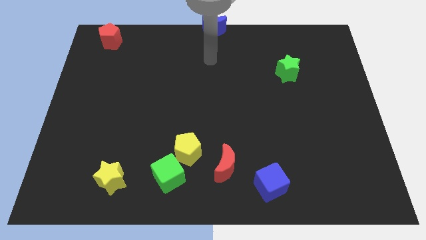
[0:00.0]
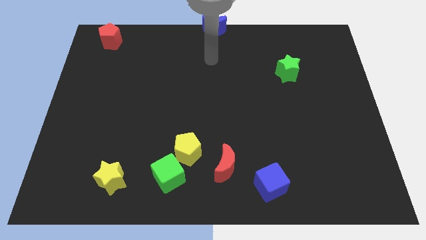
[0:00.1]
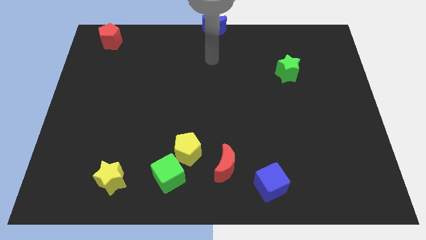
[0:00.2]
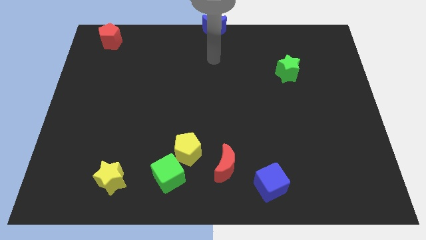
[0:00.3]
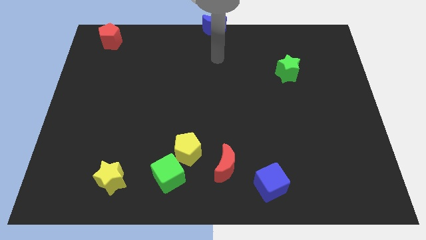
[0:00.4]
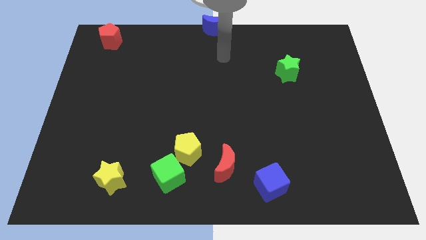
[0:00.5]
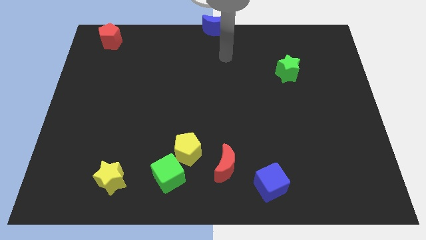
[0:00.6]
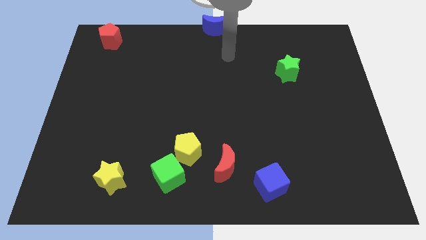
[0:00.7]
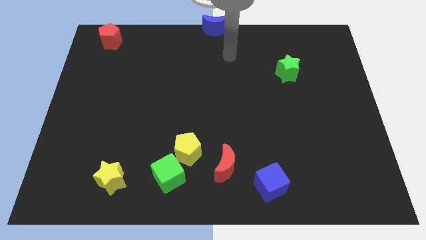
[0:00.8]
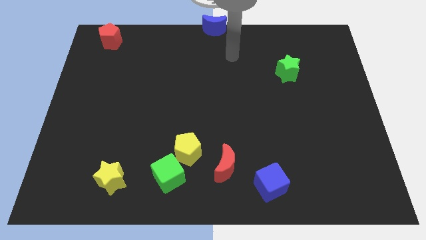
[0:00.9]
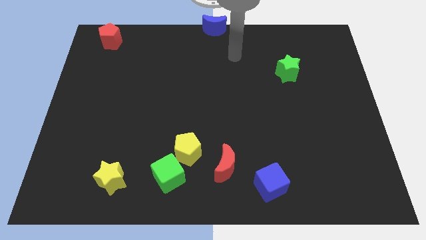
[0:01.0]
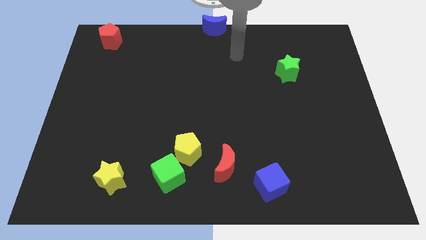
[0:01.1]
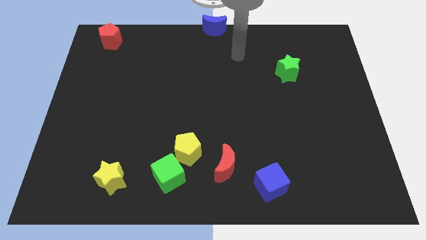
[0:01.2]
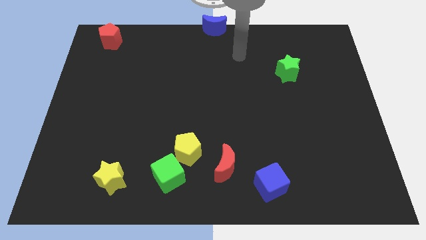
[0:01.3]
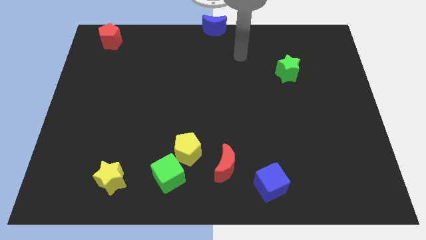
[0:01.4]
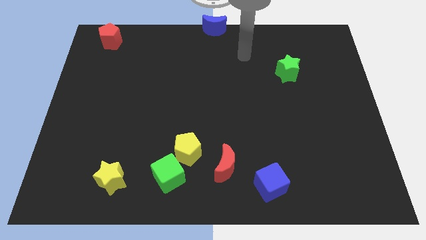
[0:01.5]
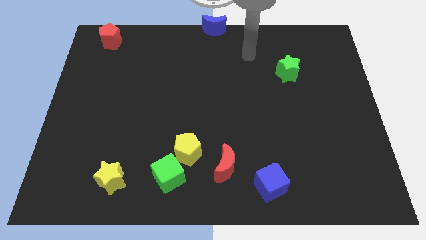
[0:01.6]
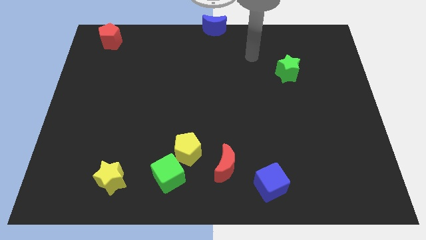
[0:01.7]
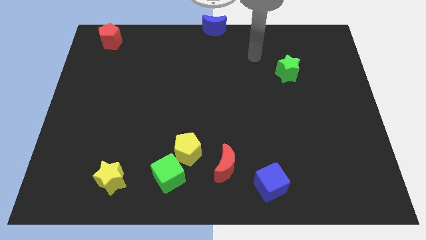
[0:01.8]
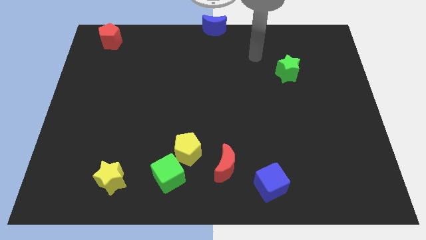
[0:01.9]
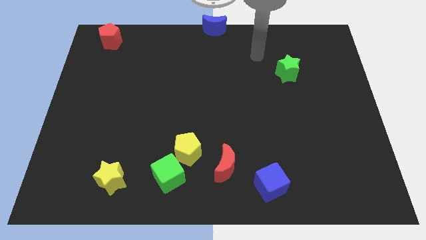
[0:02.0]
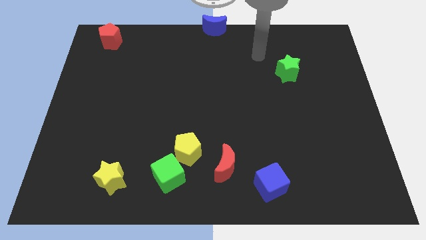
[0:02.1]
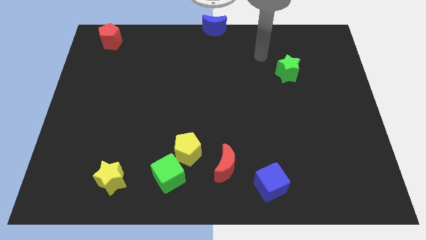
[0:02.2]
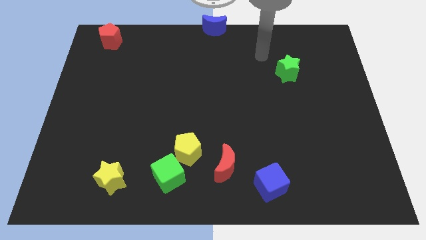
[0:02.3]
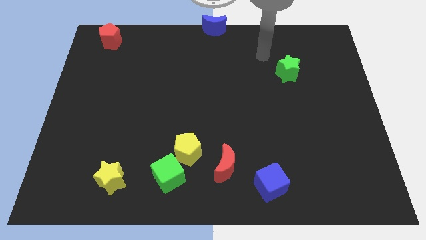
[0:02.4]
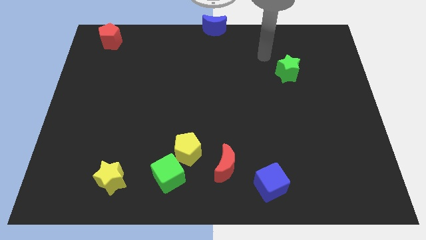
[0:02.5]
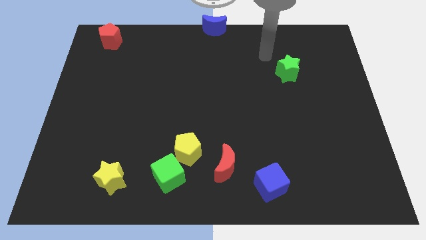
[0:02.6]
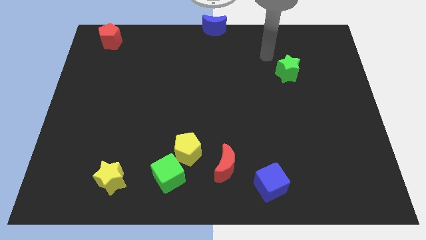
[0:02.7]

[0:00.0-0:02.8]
move the arm diagonally to the green star

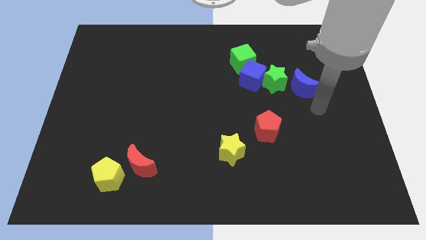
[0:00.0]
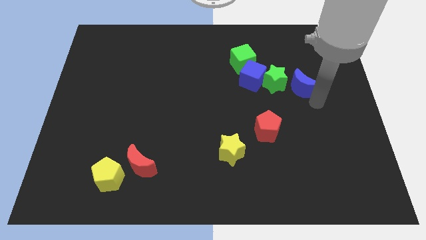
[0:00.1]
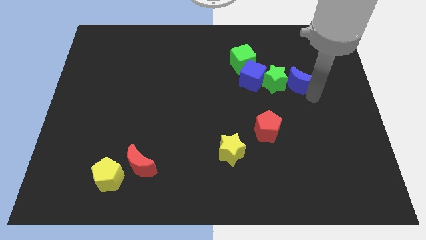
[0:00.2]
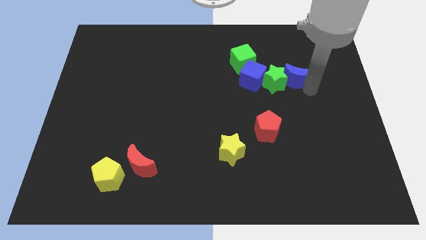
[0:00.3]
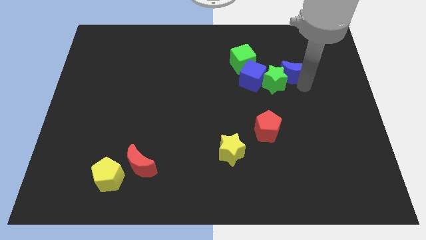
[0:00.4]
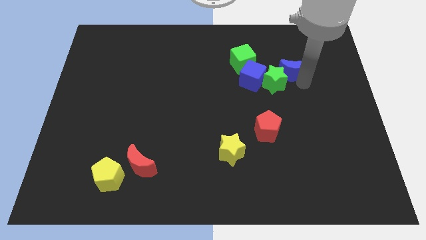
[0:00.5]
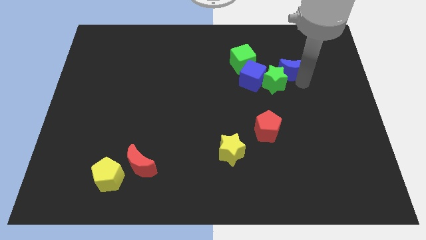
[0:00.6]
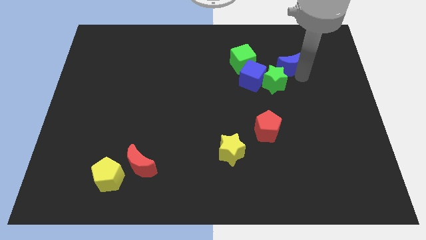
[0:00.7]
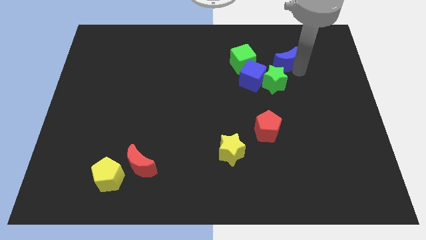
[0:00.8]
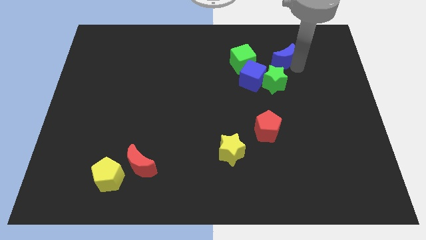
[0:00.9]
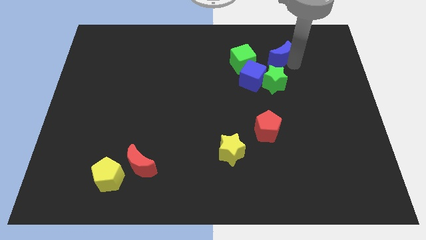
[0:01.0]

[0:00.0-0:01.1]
slide blue moon on top of green star

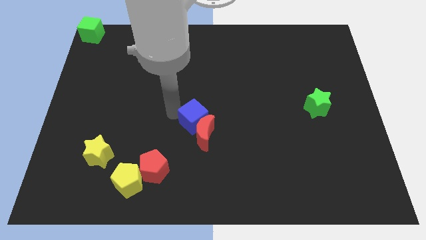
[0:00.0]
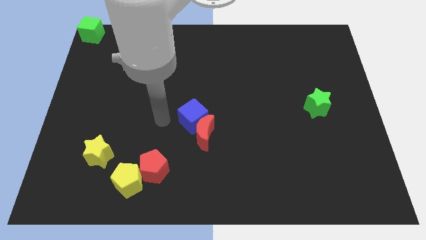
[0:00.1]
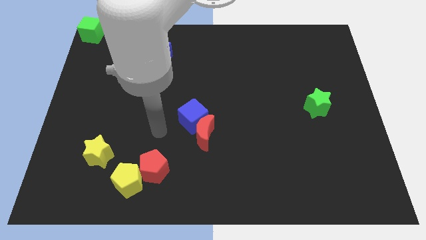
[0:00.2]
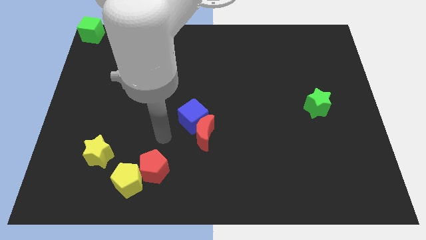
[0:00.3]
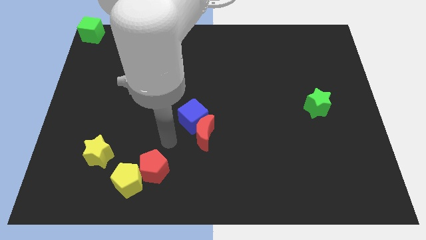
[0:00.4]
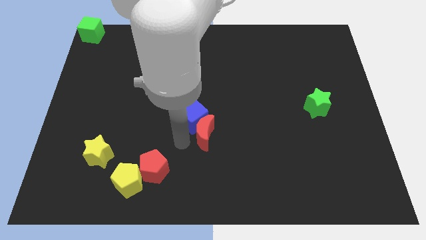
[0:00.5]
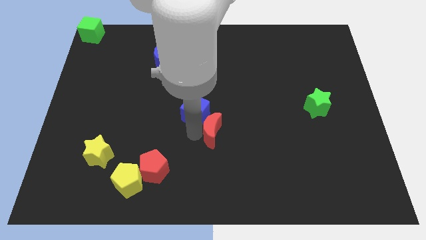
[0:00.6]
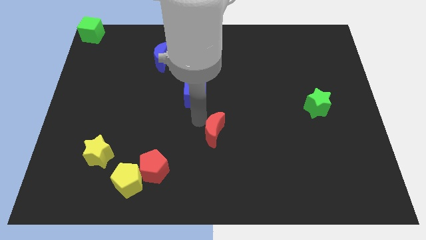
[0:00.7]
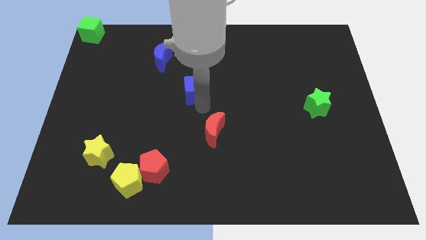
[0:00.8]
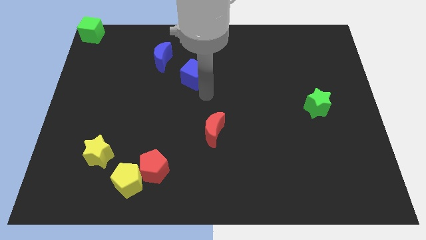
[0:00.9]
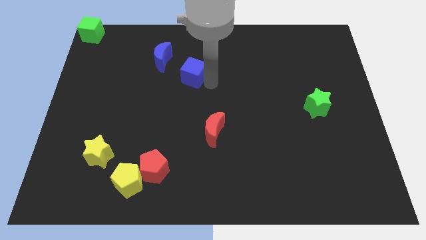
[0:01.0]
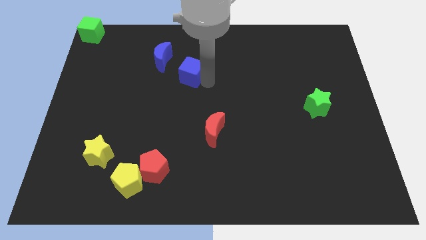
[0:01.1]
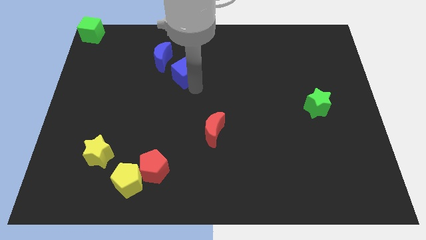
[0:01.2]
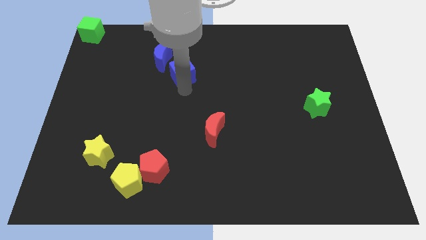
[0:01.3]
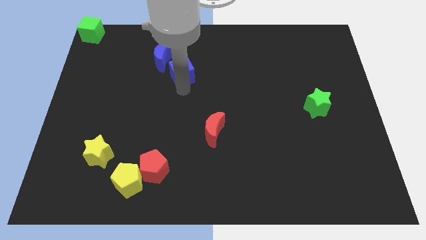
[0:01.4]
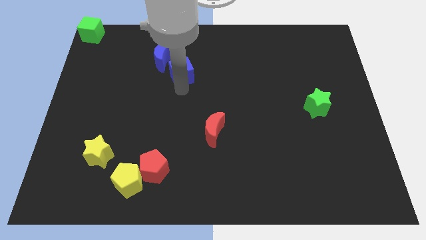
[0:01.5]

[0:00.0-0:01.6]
separate the blue cube from red crescent

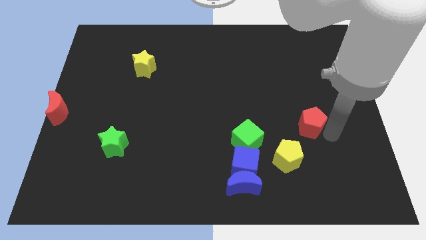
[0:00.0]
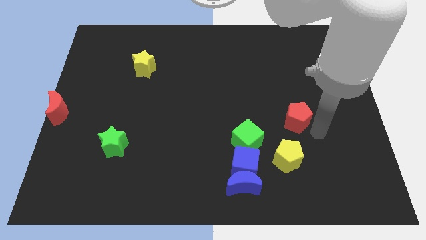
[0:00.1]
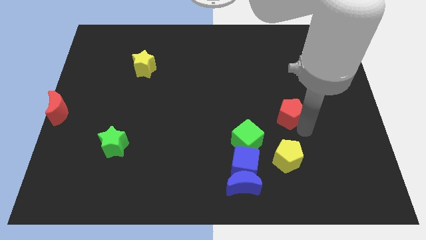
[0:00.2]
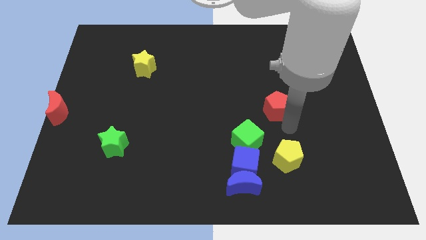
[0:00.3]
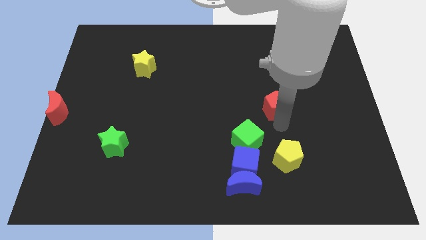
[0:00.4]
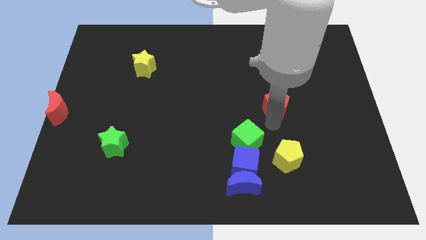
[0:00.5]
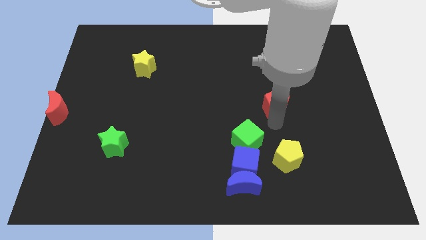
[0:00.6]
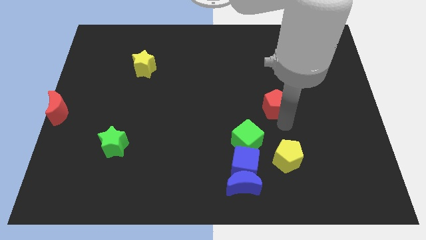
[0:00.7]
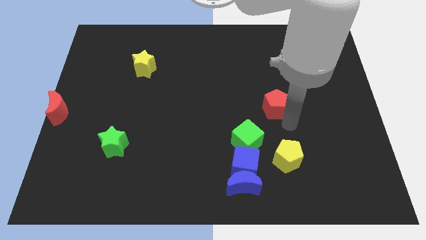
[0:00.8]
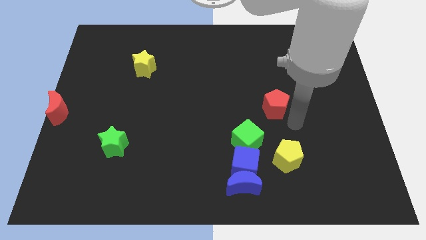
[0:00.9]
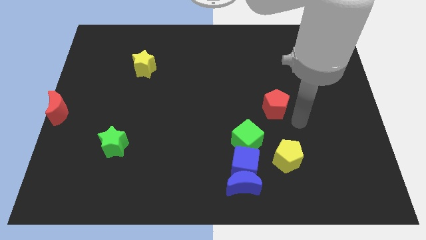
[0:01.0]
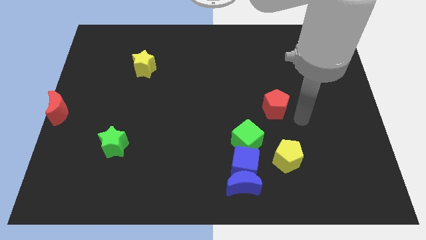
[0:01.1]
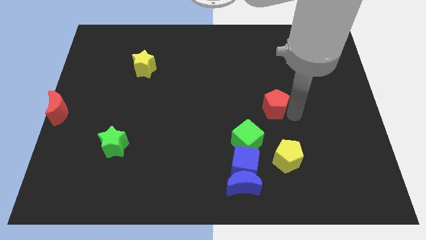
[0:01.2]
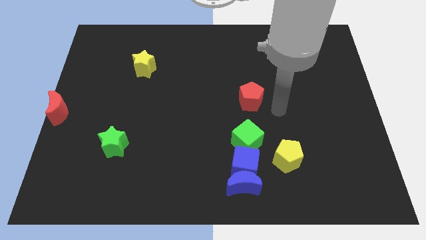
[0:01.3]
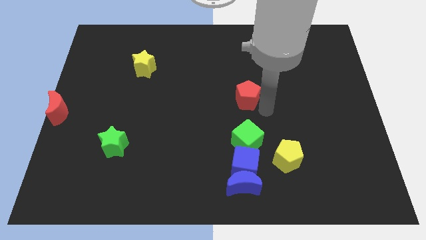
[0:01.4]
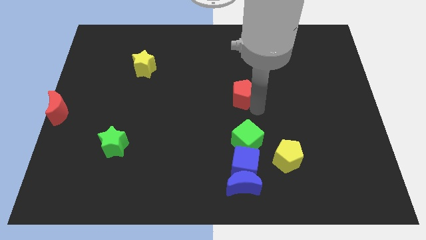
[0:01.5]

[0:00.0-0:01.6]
put the red pentagon vertically above the green cube

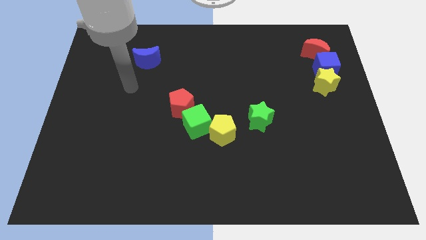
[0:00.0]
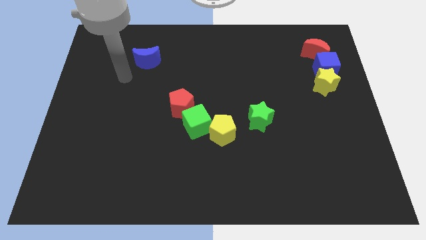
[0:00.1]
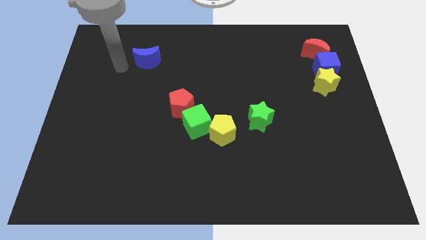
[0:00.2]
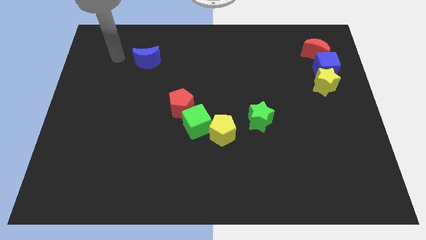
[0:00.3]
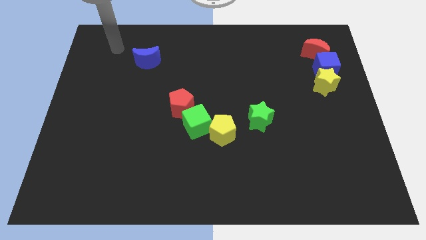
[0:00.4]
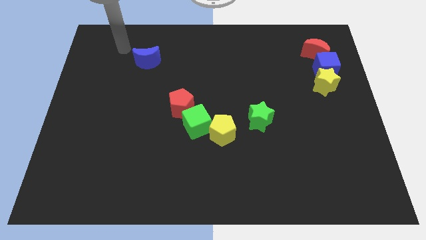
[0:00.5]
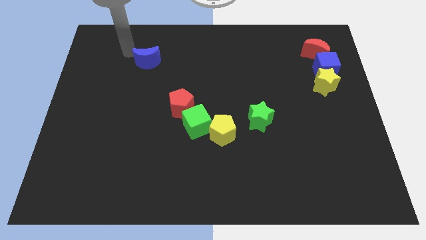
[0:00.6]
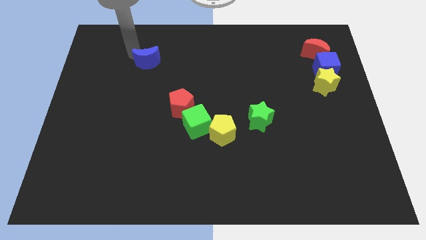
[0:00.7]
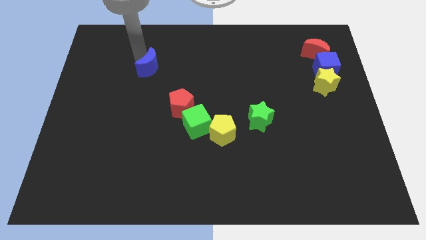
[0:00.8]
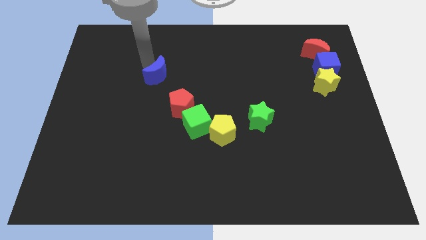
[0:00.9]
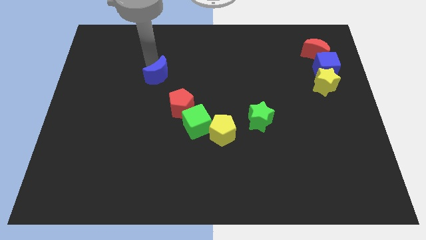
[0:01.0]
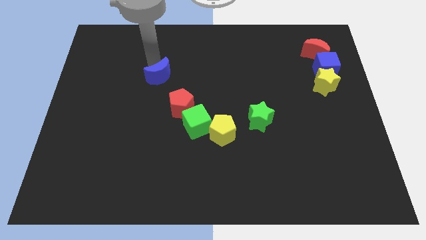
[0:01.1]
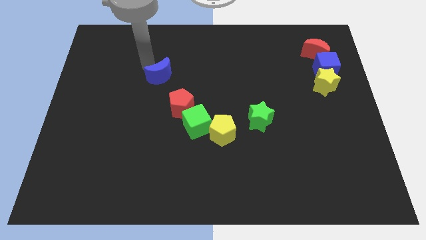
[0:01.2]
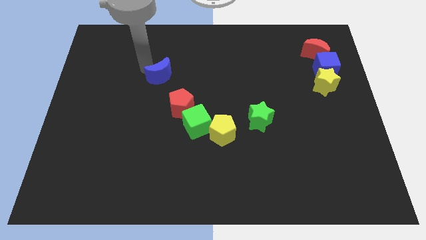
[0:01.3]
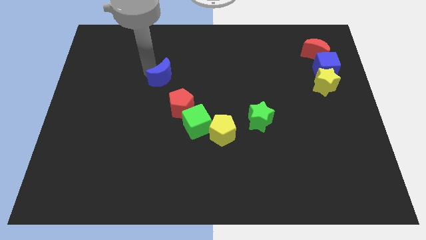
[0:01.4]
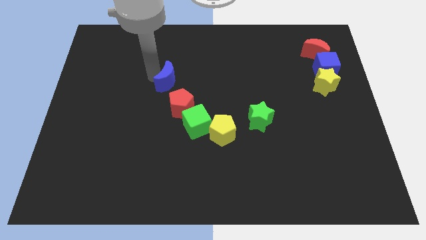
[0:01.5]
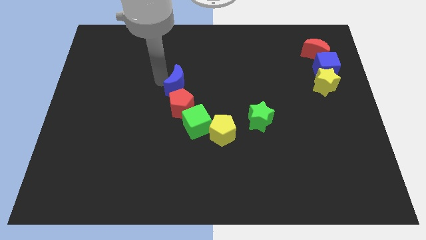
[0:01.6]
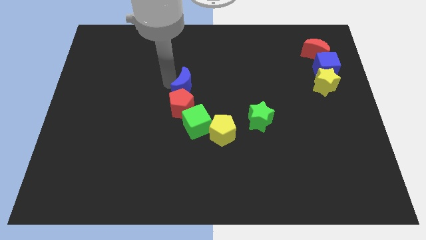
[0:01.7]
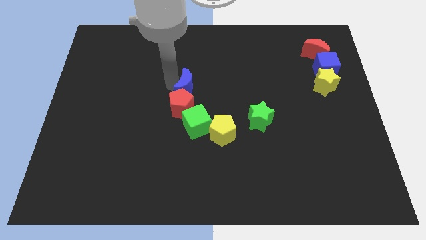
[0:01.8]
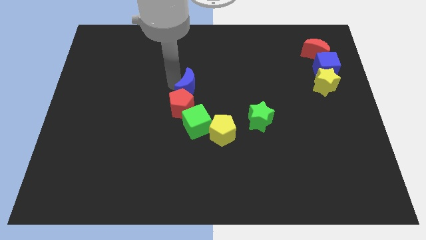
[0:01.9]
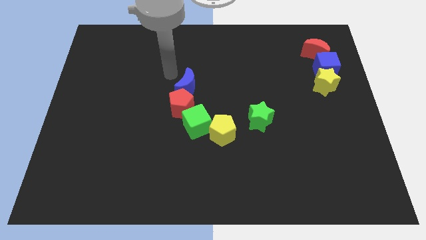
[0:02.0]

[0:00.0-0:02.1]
move blue moon on top of red pentagon
